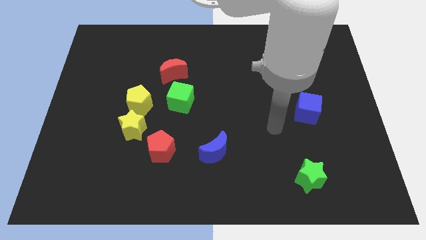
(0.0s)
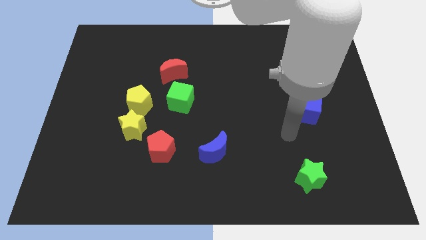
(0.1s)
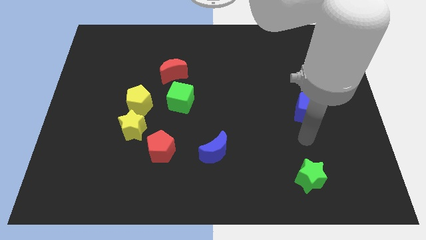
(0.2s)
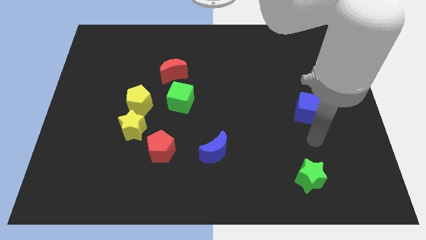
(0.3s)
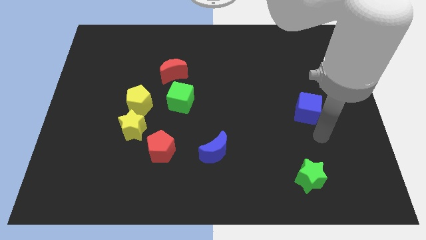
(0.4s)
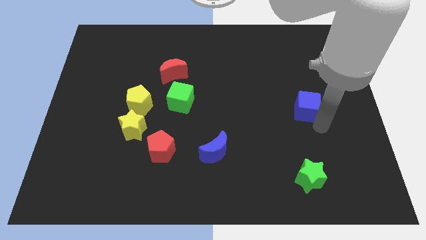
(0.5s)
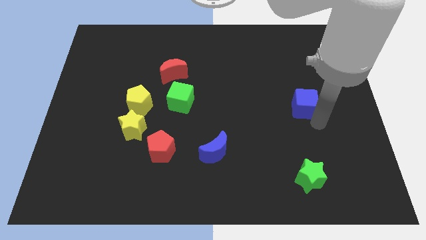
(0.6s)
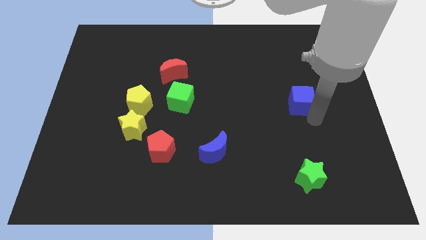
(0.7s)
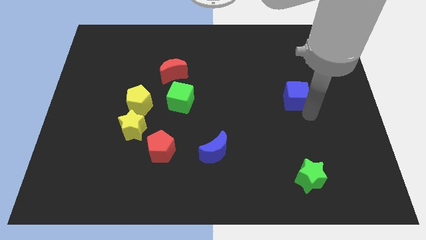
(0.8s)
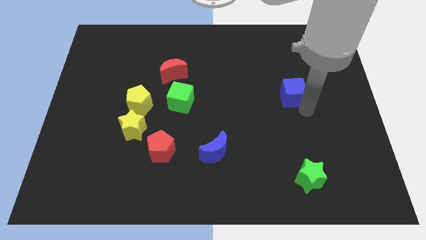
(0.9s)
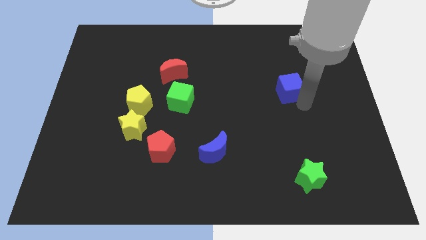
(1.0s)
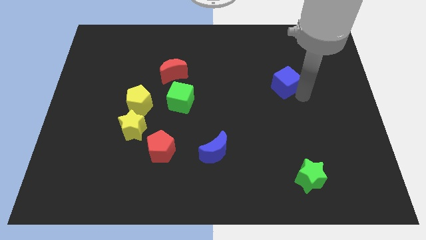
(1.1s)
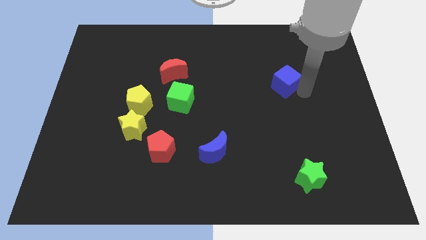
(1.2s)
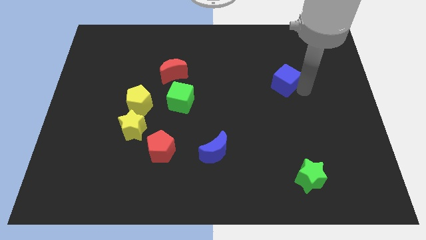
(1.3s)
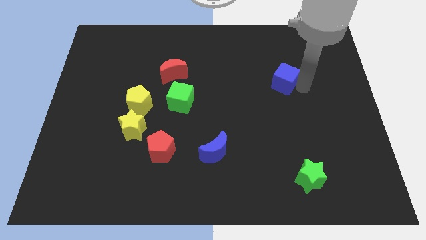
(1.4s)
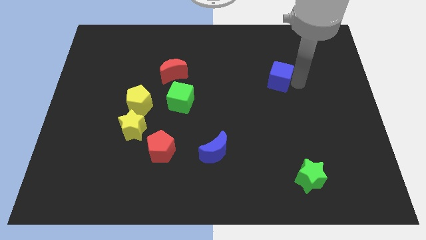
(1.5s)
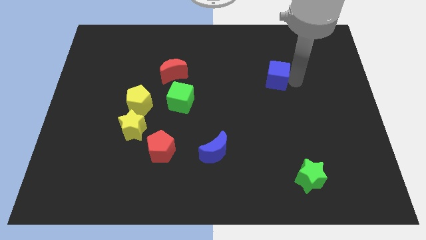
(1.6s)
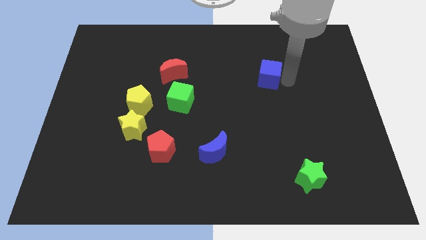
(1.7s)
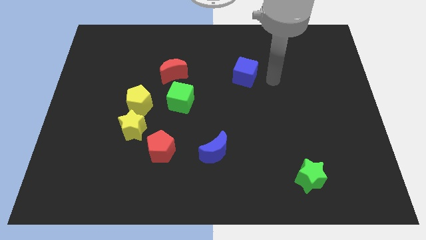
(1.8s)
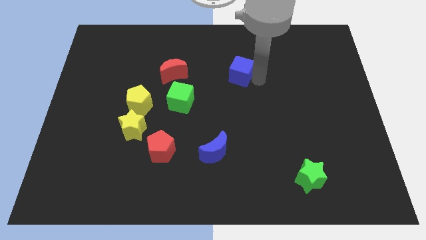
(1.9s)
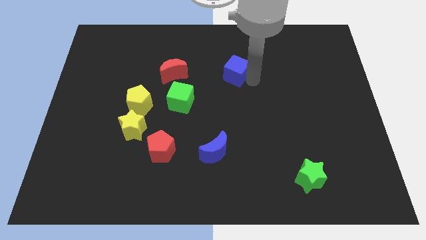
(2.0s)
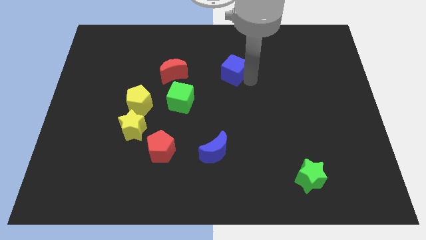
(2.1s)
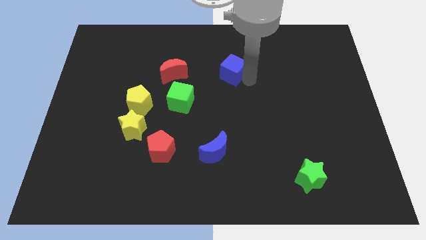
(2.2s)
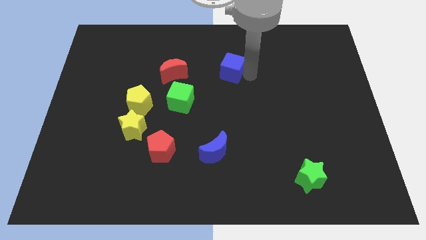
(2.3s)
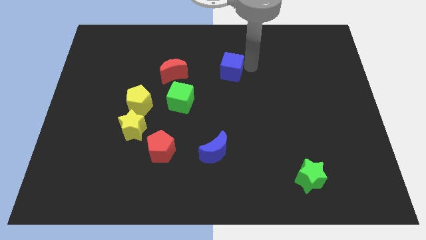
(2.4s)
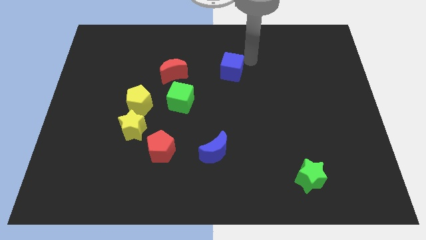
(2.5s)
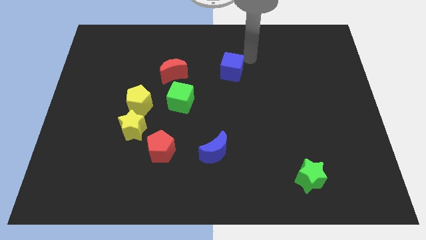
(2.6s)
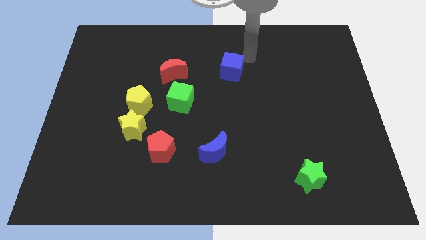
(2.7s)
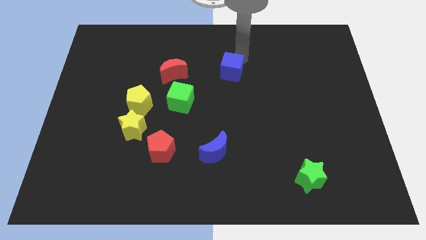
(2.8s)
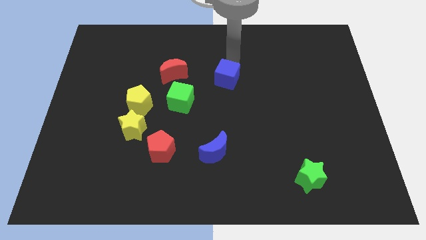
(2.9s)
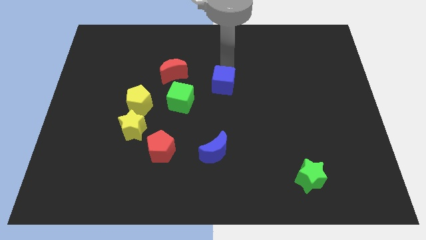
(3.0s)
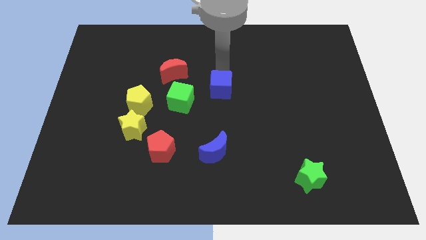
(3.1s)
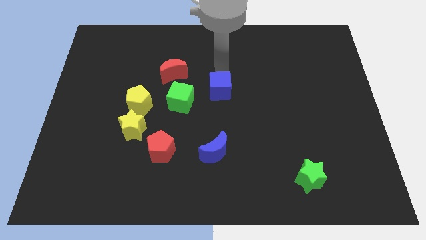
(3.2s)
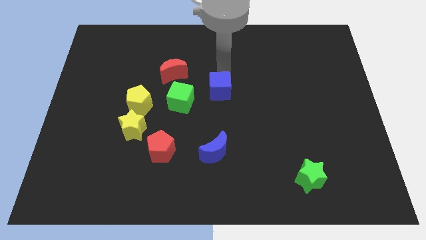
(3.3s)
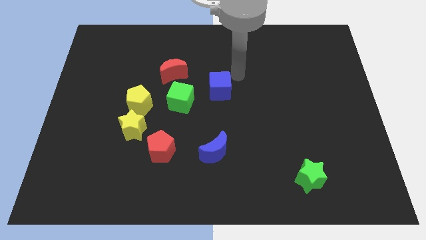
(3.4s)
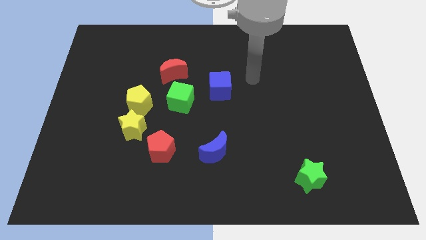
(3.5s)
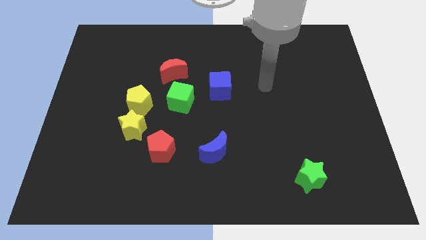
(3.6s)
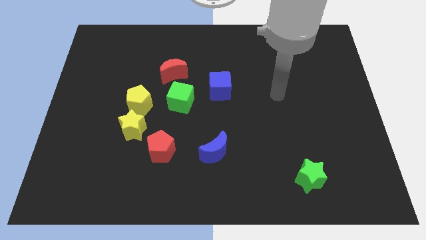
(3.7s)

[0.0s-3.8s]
move the blue cube to the vertical top side of the blue moon

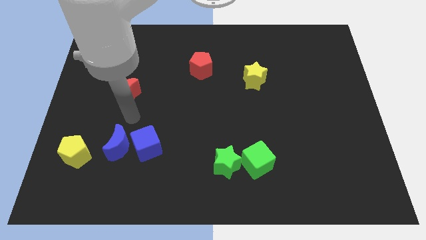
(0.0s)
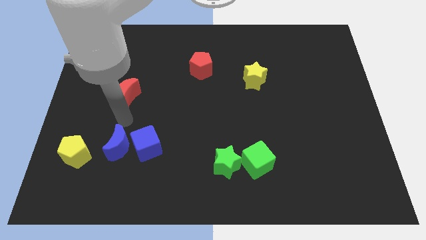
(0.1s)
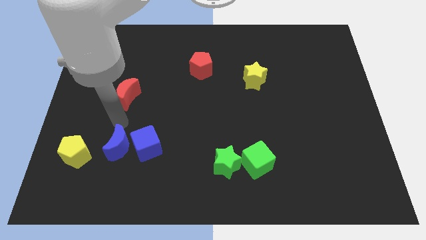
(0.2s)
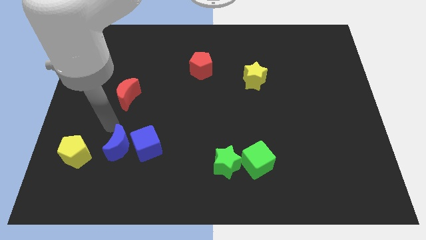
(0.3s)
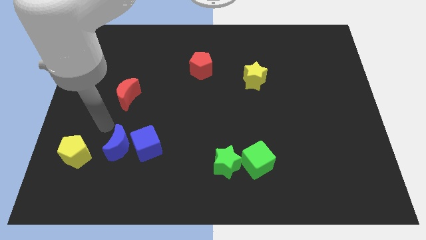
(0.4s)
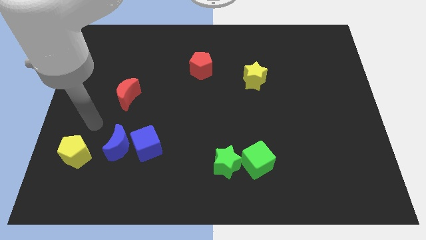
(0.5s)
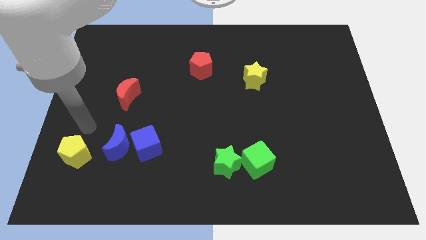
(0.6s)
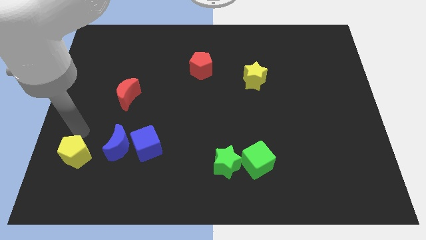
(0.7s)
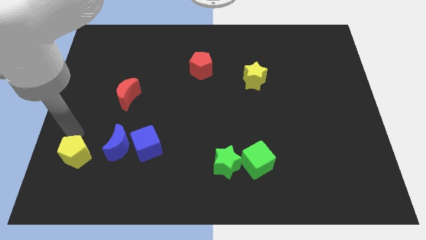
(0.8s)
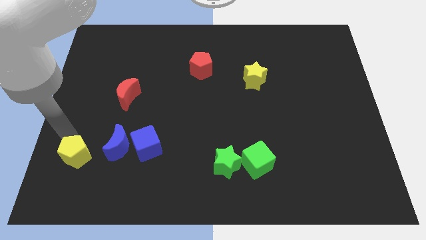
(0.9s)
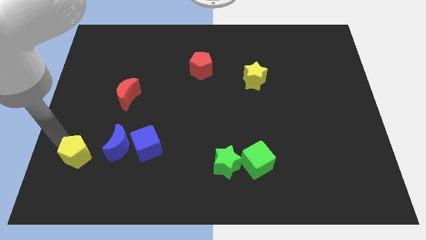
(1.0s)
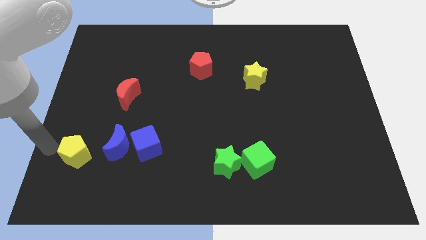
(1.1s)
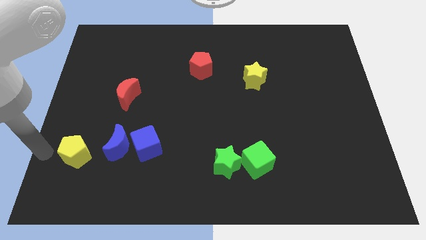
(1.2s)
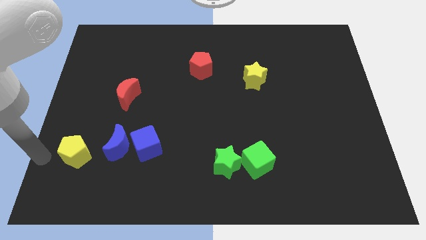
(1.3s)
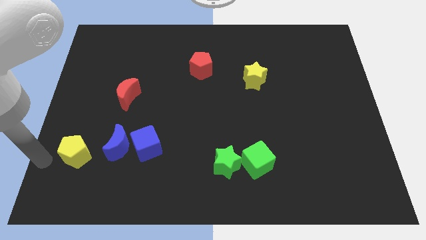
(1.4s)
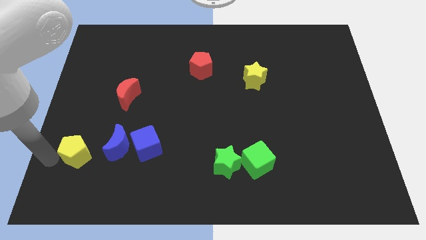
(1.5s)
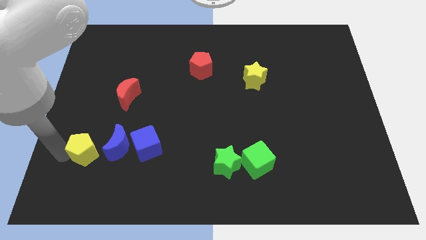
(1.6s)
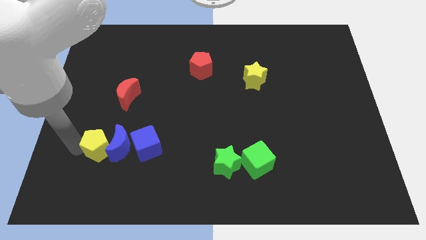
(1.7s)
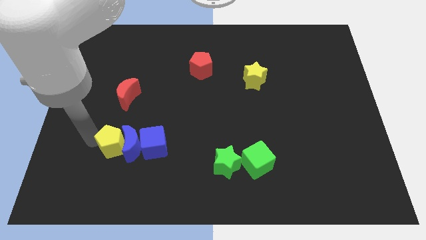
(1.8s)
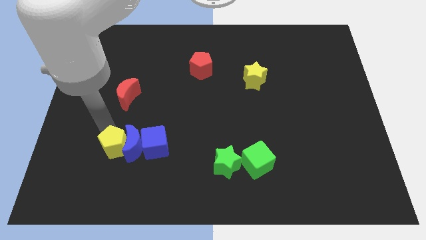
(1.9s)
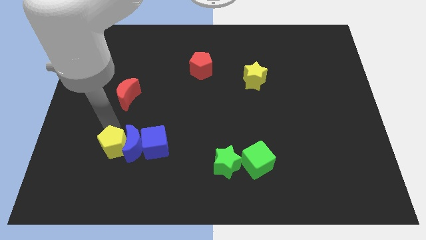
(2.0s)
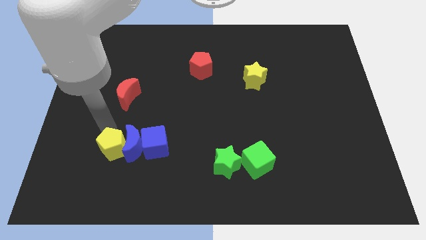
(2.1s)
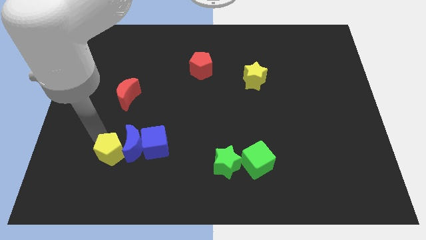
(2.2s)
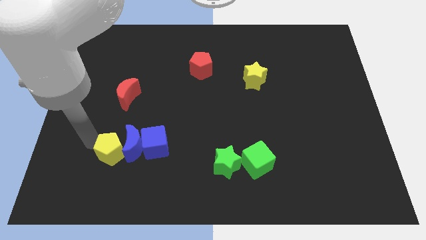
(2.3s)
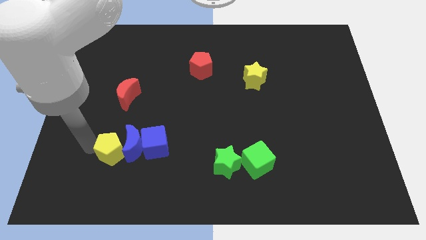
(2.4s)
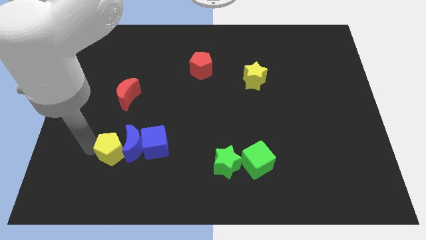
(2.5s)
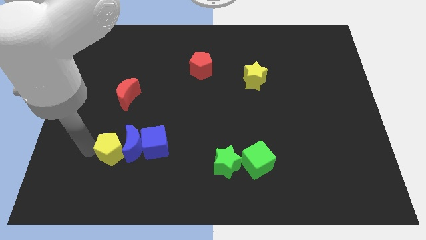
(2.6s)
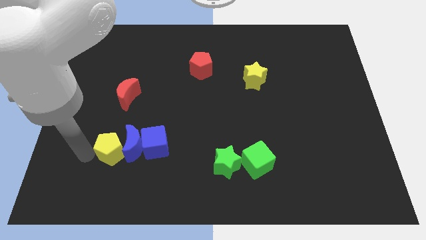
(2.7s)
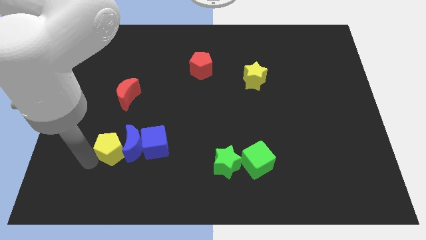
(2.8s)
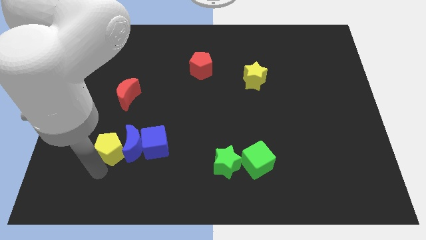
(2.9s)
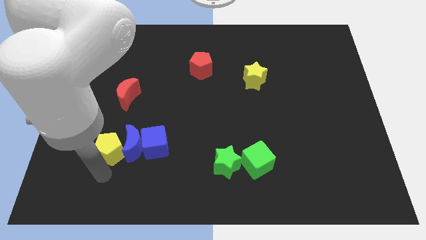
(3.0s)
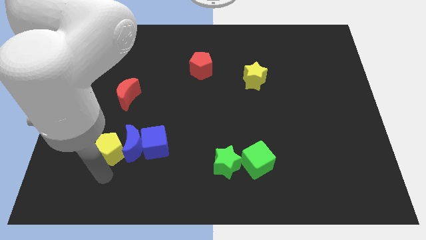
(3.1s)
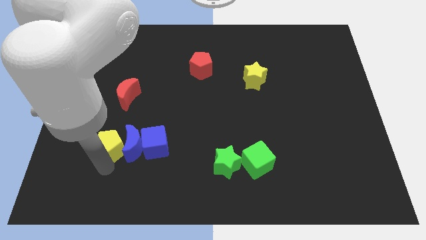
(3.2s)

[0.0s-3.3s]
push the yellow pentagon into the left side of the blue crescent

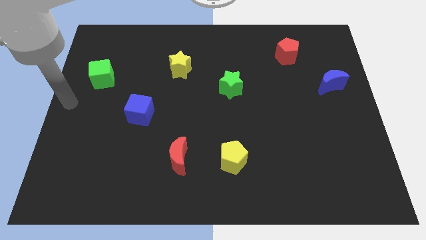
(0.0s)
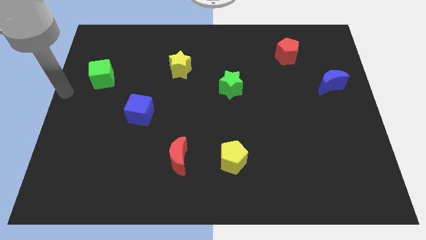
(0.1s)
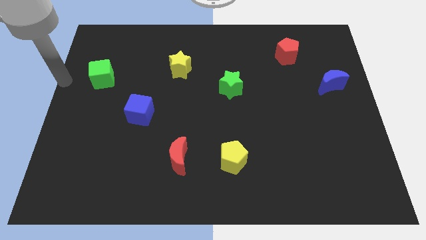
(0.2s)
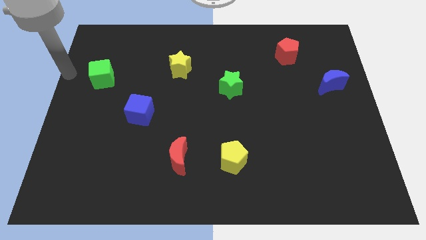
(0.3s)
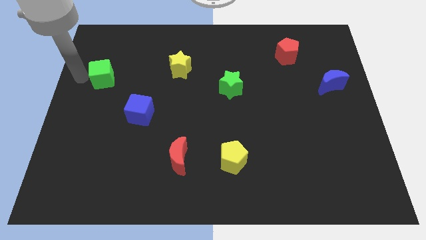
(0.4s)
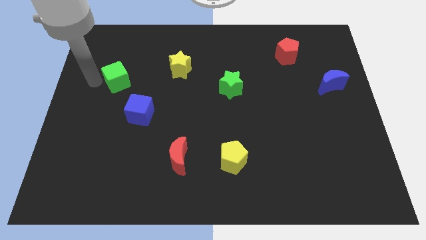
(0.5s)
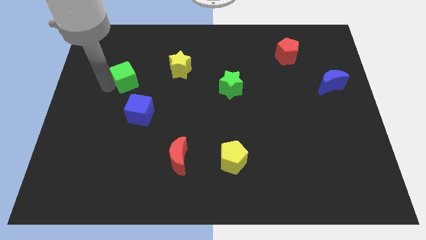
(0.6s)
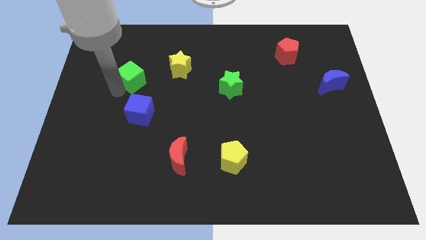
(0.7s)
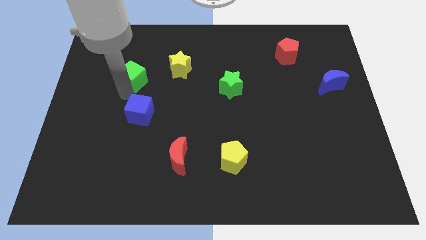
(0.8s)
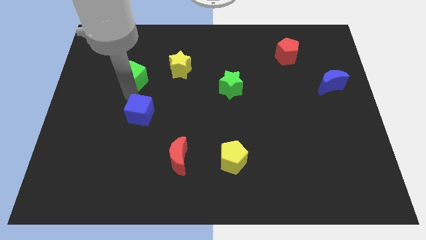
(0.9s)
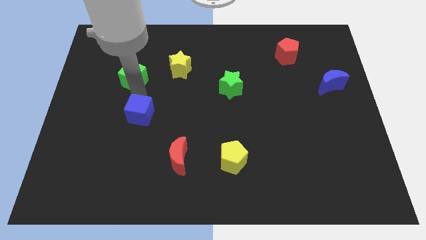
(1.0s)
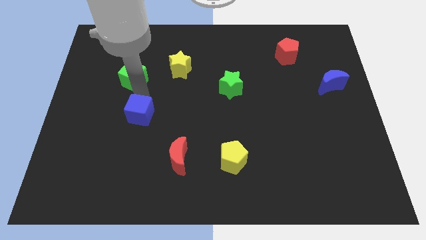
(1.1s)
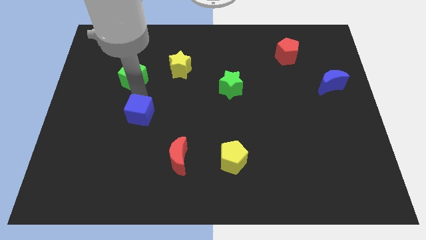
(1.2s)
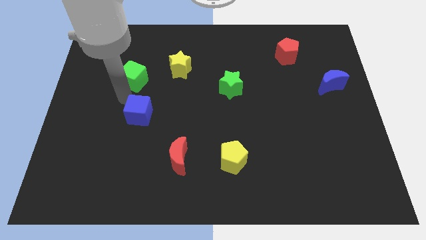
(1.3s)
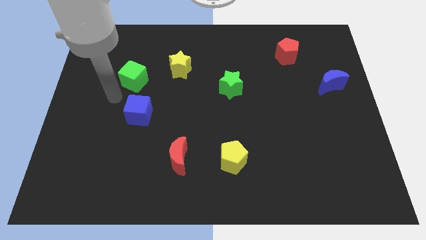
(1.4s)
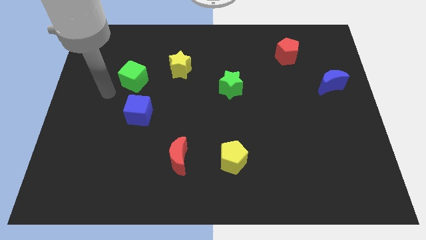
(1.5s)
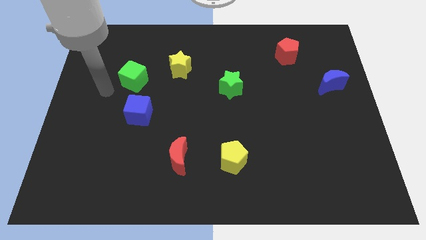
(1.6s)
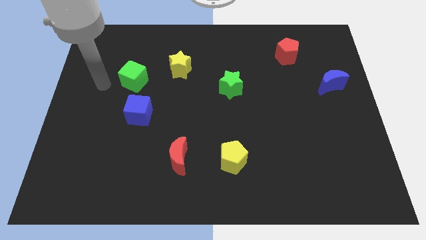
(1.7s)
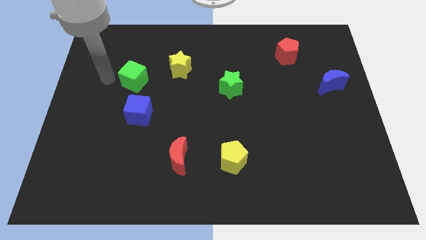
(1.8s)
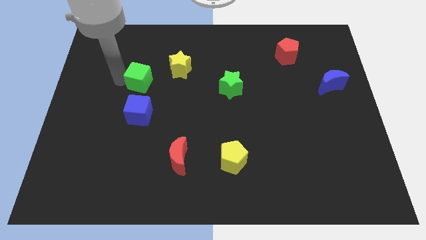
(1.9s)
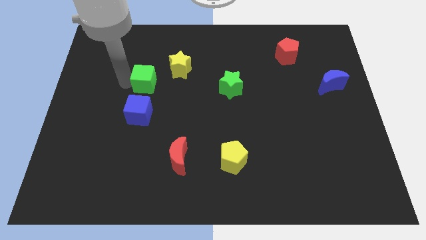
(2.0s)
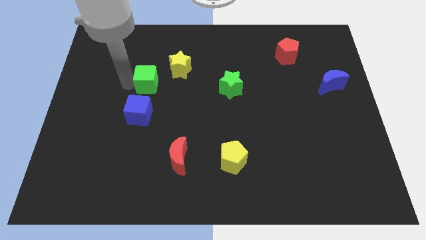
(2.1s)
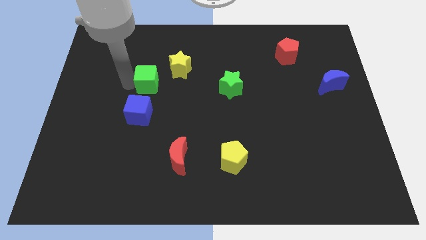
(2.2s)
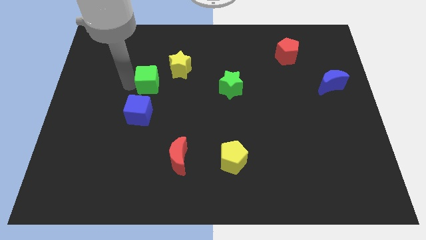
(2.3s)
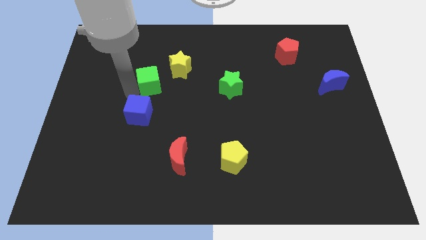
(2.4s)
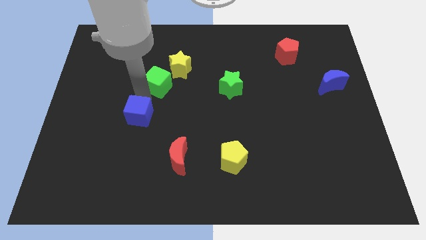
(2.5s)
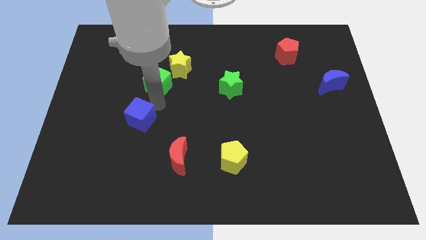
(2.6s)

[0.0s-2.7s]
place the arm between the blue cube and green cube
